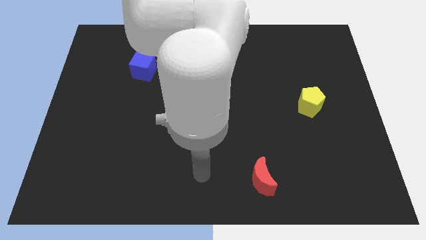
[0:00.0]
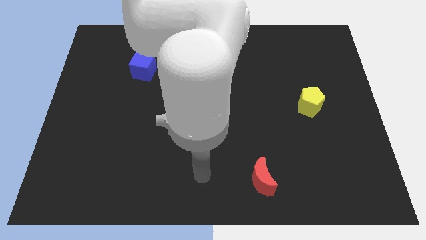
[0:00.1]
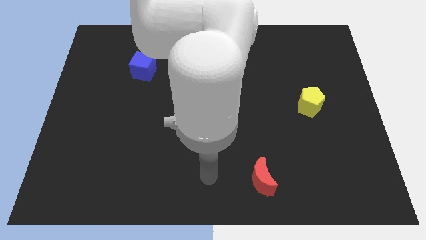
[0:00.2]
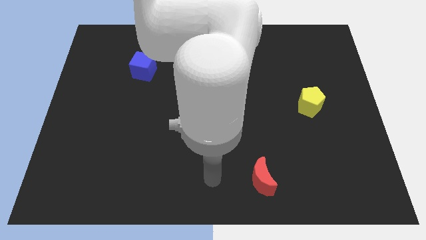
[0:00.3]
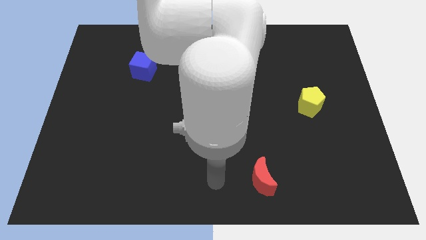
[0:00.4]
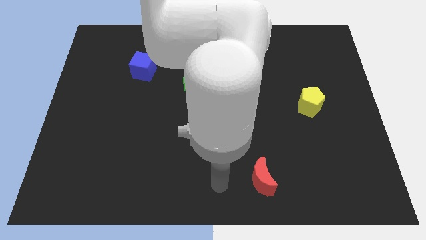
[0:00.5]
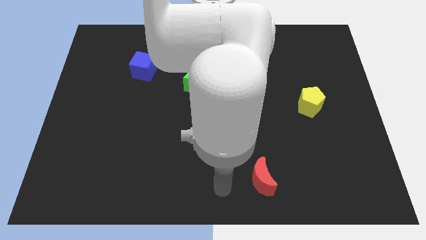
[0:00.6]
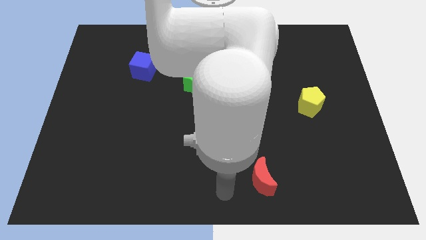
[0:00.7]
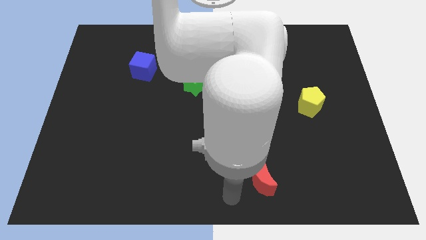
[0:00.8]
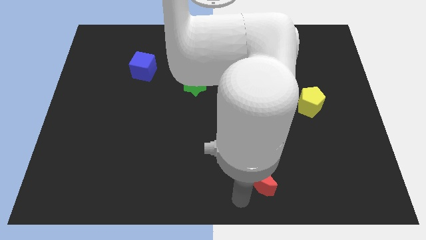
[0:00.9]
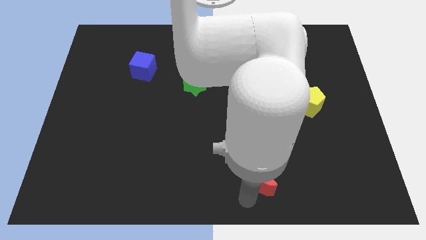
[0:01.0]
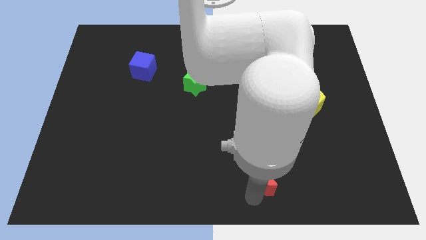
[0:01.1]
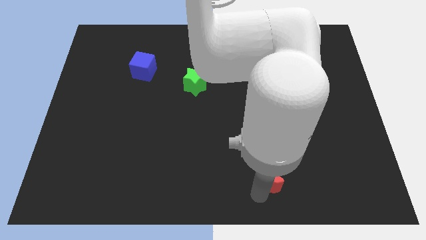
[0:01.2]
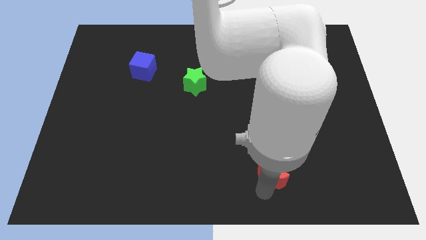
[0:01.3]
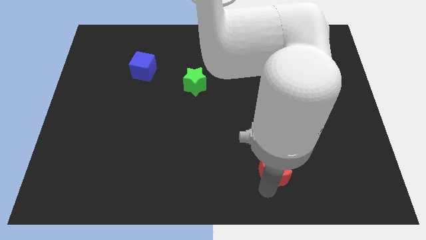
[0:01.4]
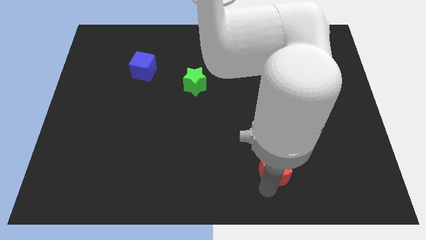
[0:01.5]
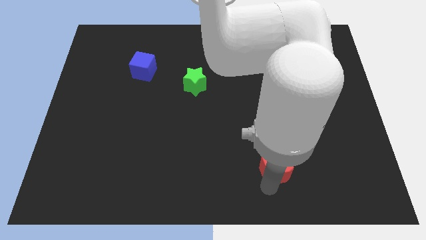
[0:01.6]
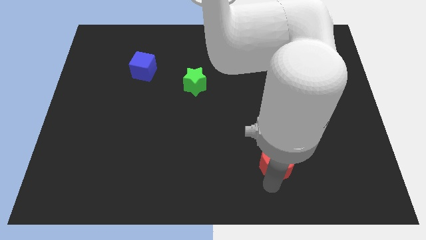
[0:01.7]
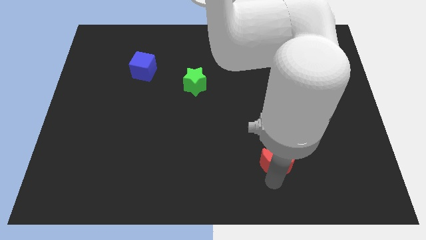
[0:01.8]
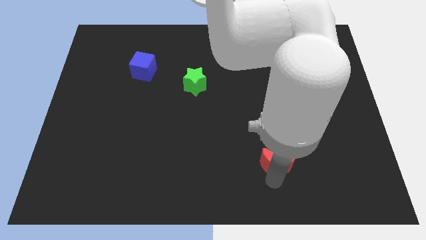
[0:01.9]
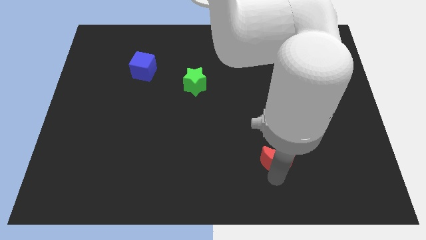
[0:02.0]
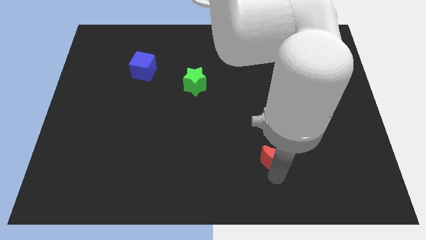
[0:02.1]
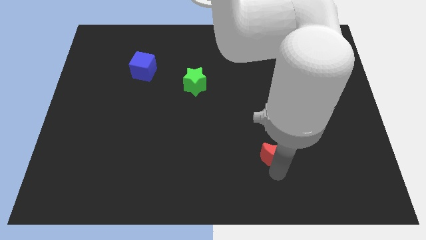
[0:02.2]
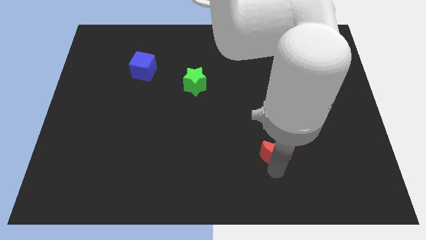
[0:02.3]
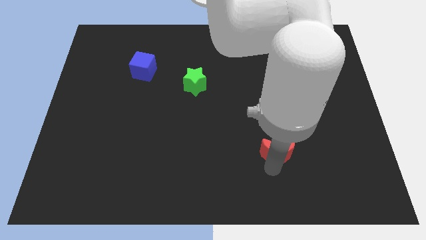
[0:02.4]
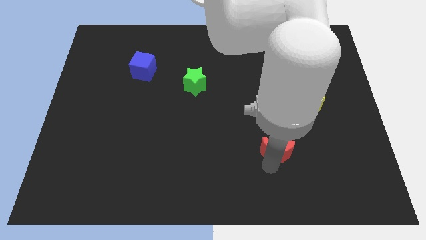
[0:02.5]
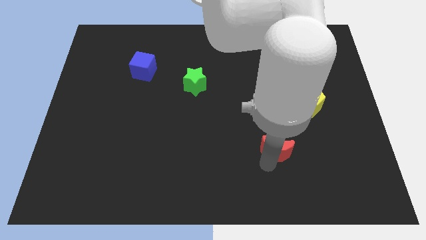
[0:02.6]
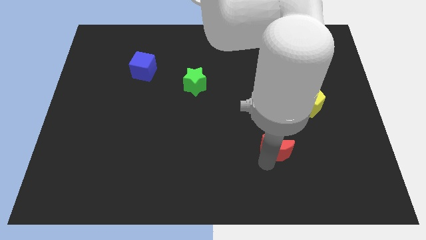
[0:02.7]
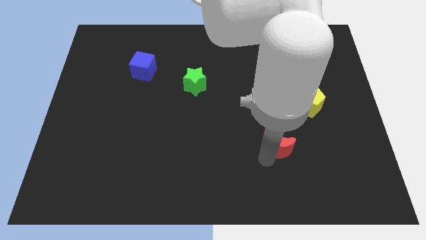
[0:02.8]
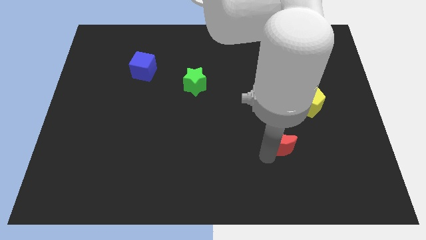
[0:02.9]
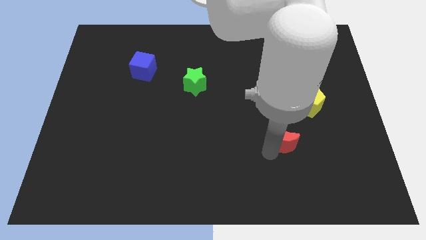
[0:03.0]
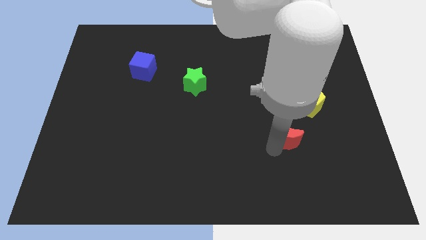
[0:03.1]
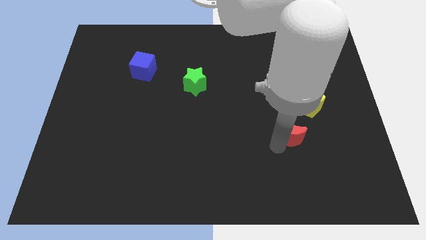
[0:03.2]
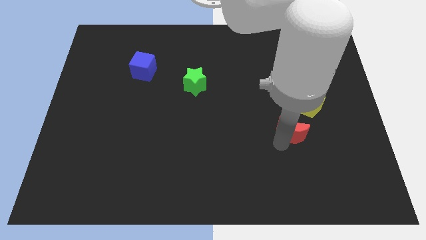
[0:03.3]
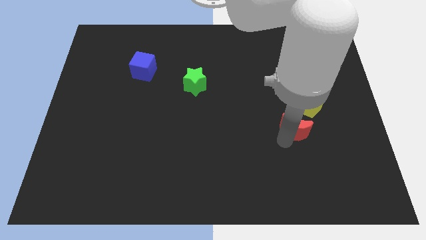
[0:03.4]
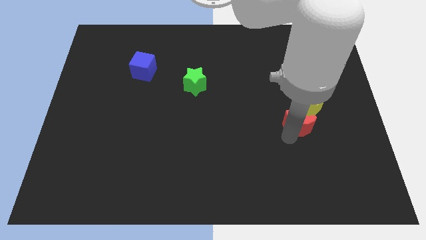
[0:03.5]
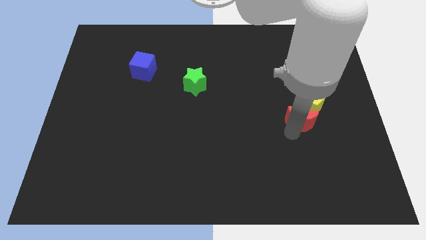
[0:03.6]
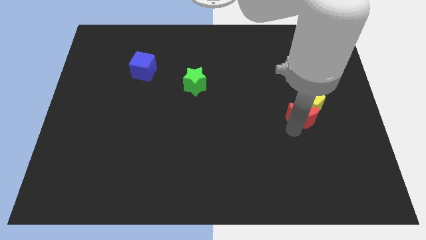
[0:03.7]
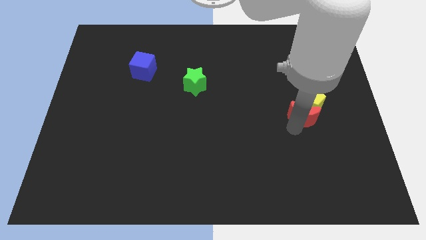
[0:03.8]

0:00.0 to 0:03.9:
slide the red moon to the yellow block

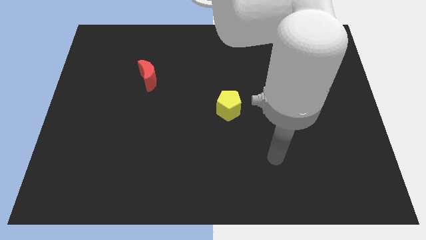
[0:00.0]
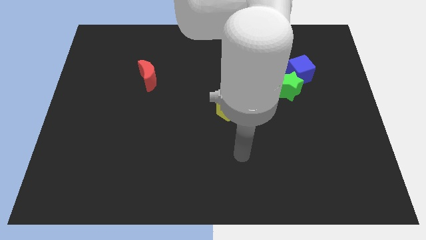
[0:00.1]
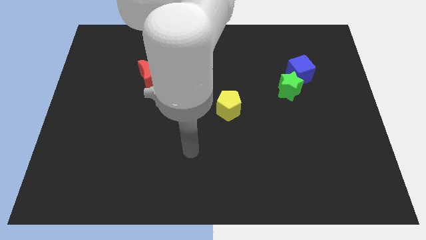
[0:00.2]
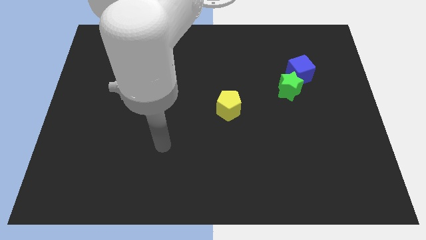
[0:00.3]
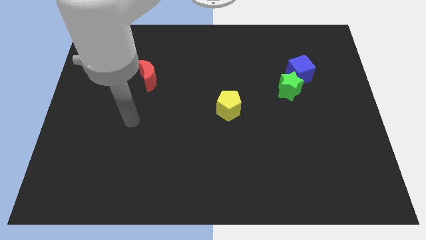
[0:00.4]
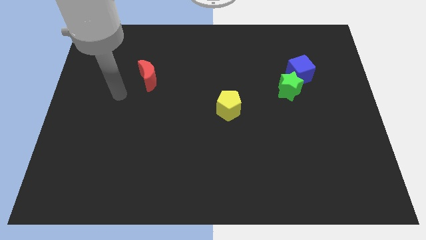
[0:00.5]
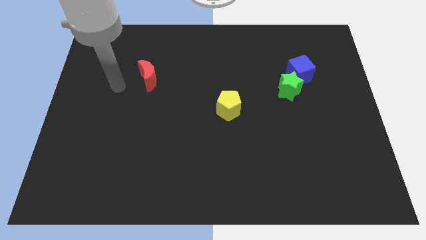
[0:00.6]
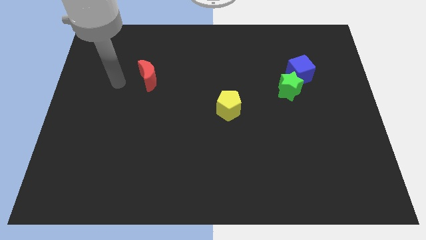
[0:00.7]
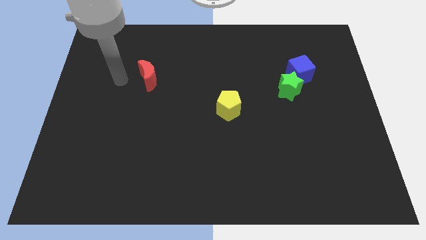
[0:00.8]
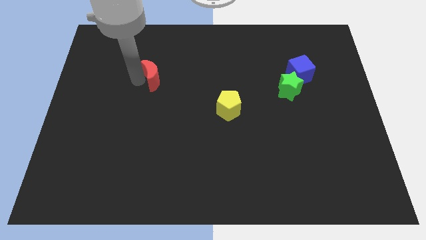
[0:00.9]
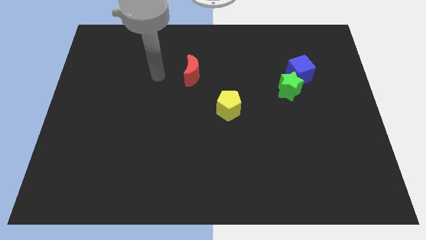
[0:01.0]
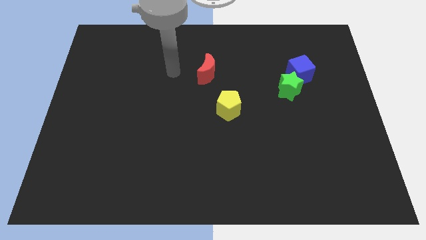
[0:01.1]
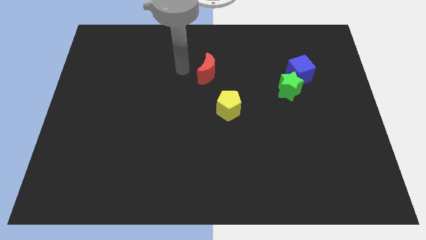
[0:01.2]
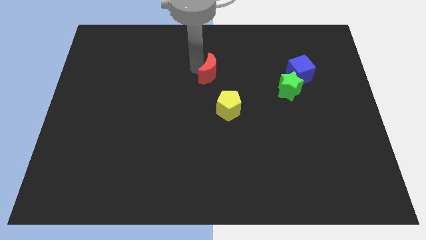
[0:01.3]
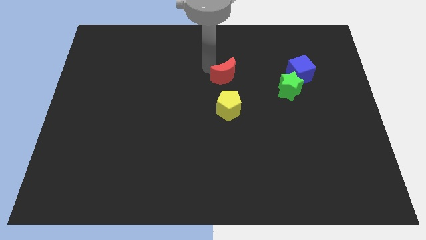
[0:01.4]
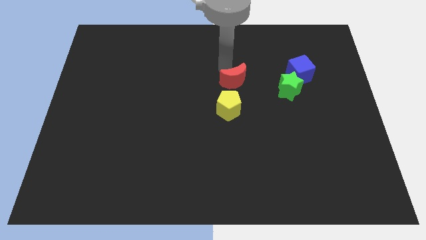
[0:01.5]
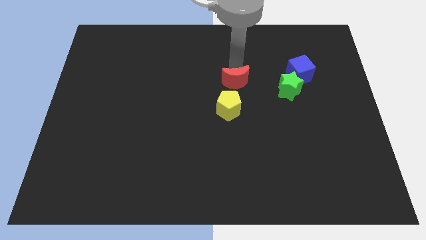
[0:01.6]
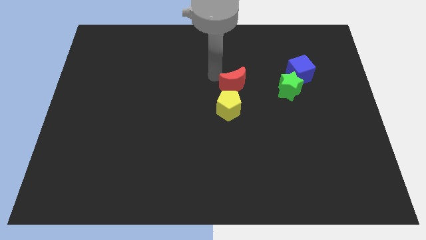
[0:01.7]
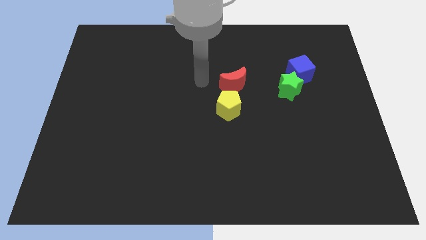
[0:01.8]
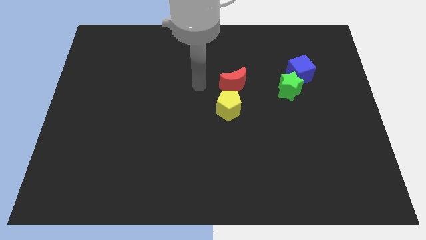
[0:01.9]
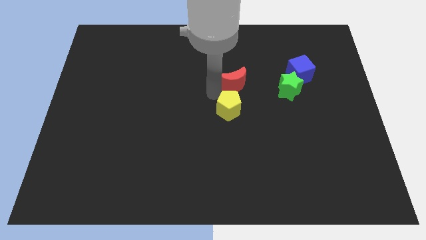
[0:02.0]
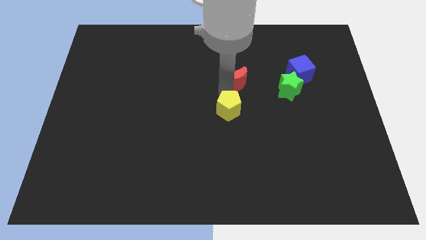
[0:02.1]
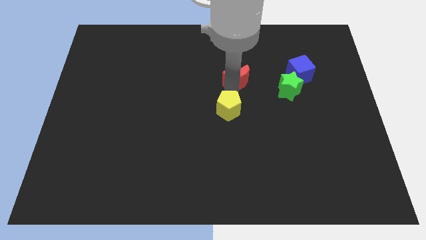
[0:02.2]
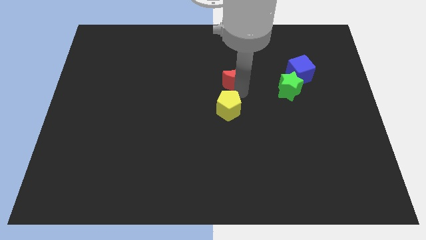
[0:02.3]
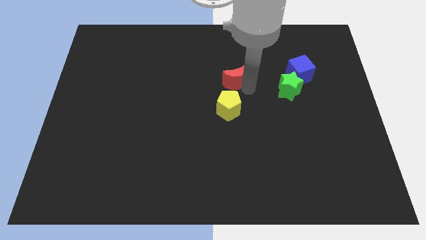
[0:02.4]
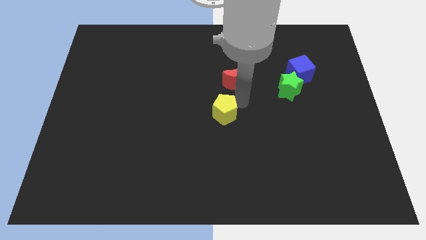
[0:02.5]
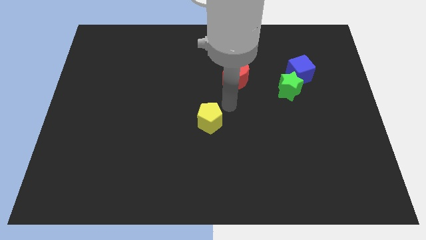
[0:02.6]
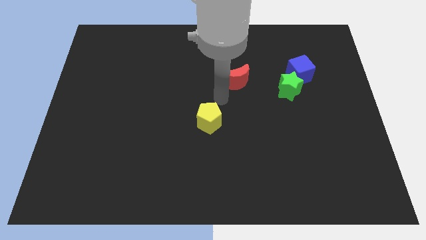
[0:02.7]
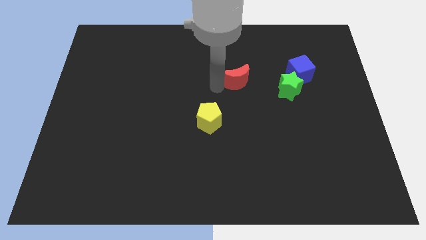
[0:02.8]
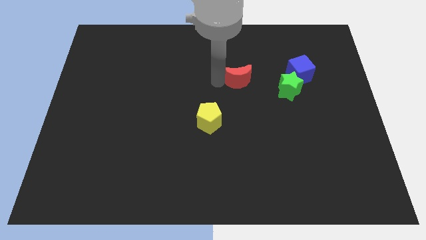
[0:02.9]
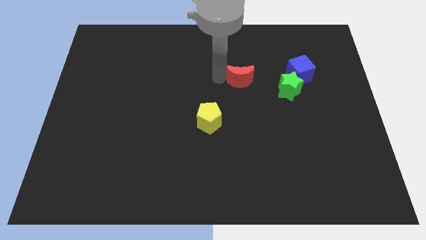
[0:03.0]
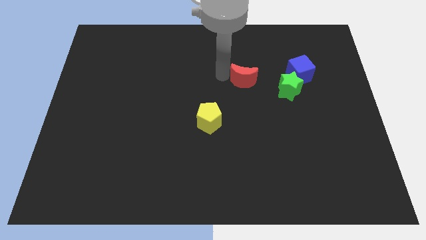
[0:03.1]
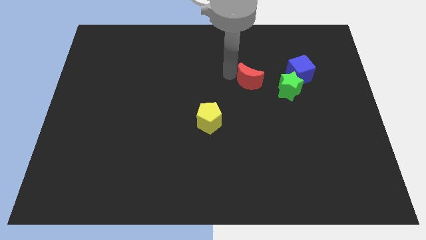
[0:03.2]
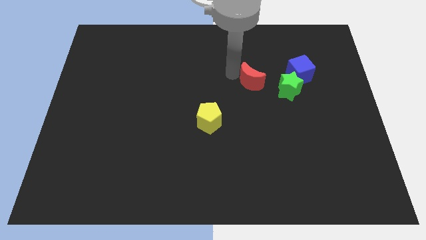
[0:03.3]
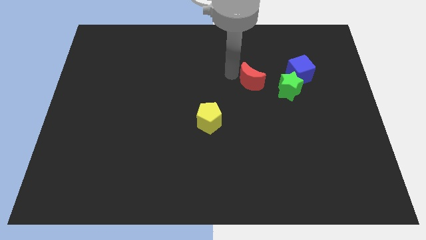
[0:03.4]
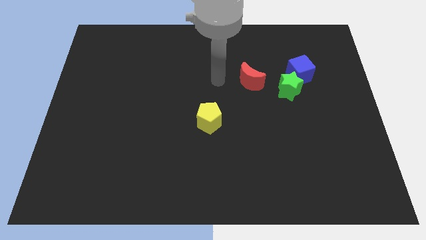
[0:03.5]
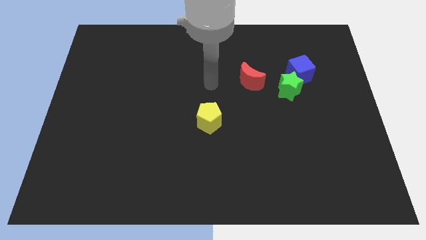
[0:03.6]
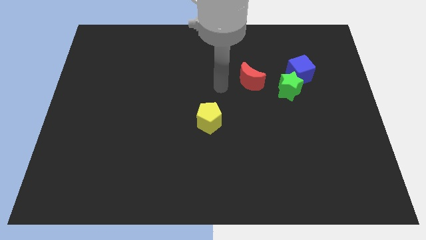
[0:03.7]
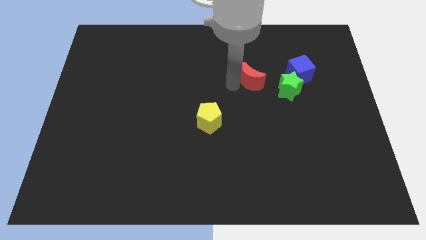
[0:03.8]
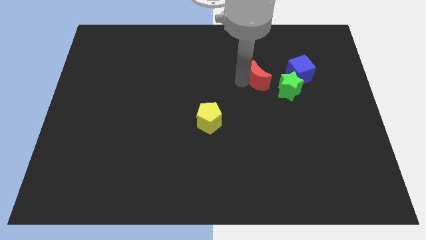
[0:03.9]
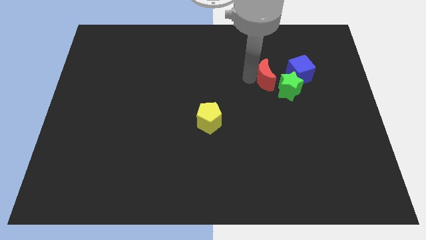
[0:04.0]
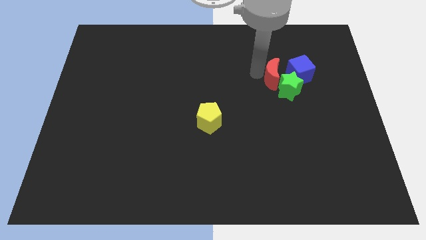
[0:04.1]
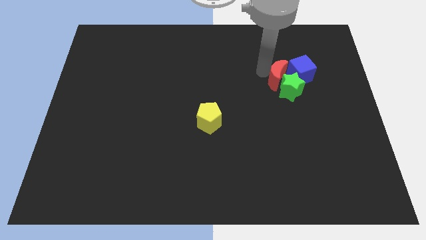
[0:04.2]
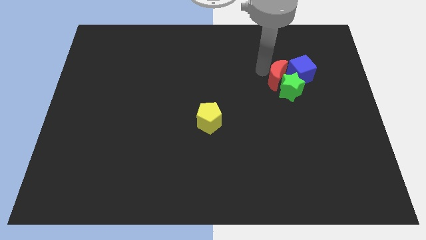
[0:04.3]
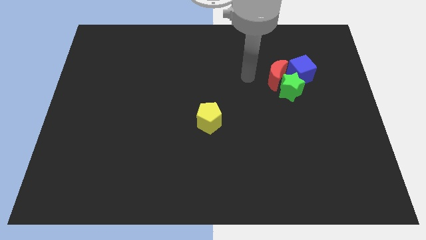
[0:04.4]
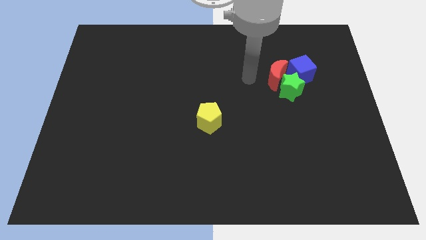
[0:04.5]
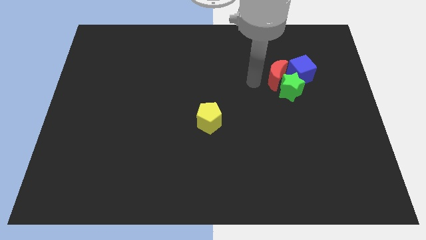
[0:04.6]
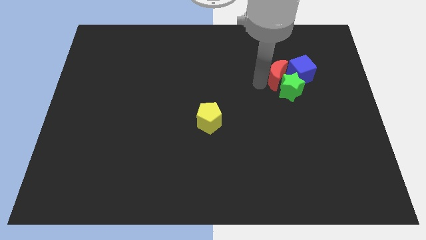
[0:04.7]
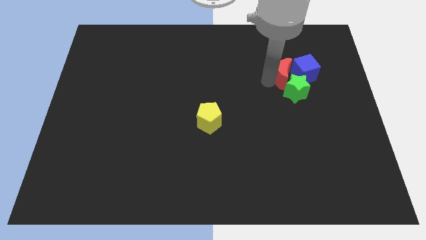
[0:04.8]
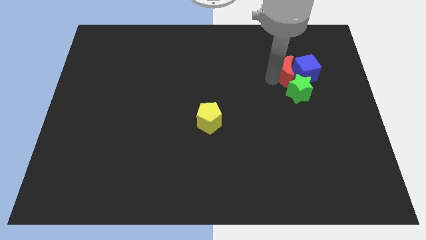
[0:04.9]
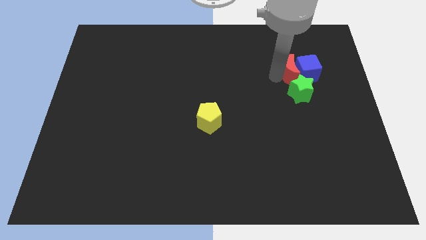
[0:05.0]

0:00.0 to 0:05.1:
push the red block to the blue block
